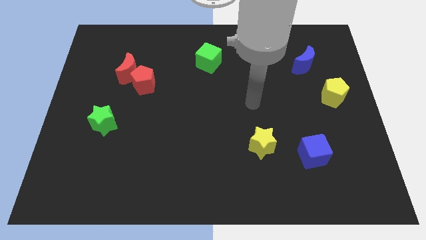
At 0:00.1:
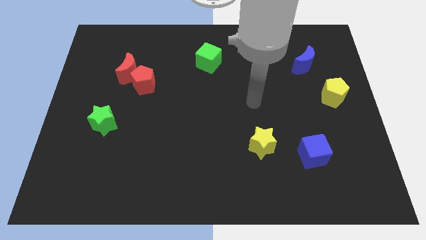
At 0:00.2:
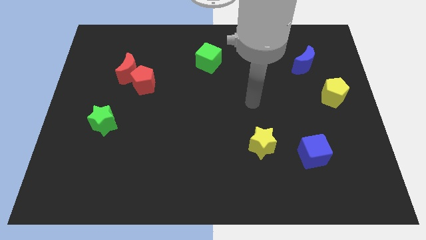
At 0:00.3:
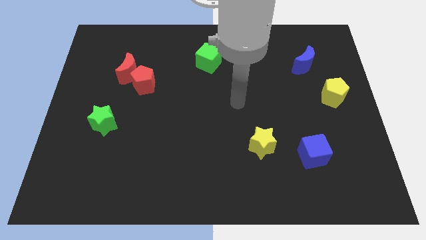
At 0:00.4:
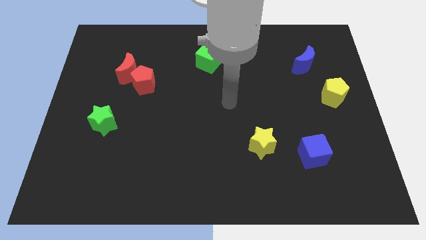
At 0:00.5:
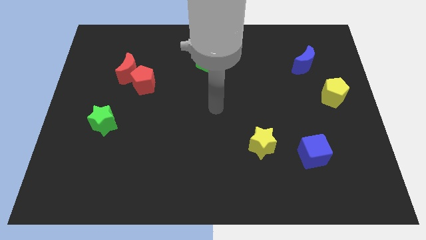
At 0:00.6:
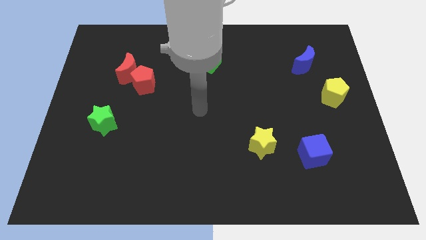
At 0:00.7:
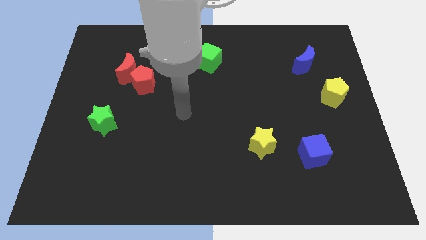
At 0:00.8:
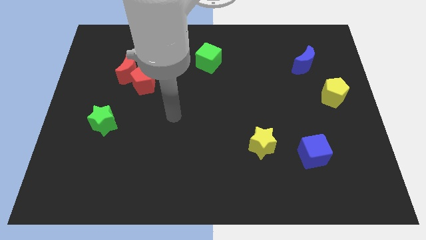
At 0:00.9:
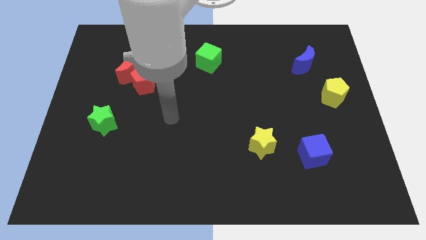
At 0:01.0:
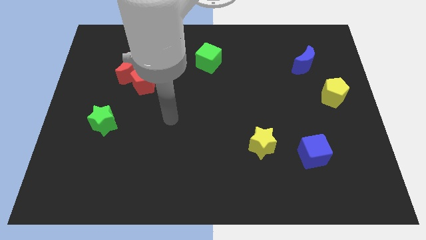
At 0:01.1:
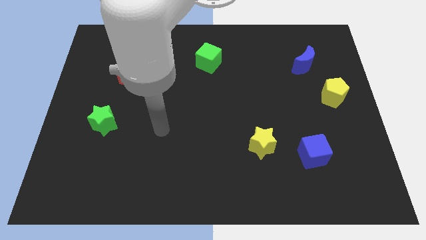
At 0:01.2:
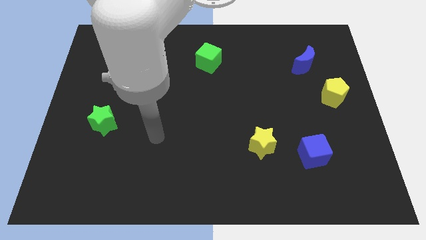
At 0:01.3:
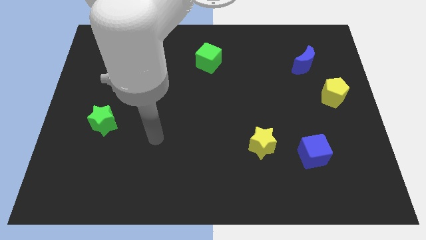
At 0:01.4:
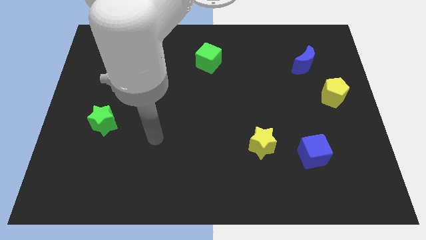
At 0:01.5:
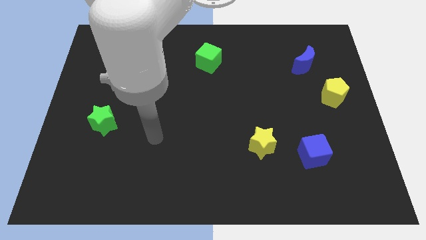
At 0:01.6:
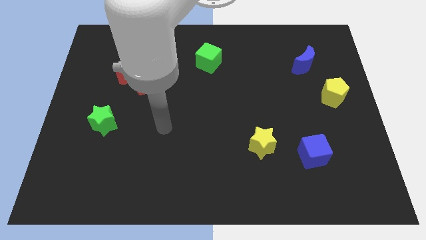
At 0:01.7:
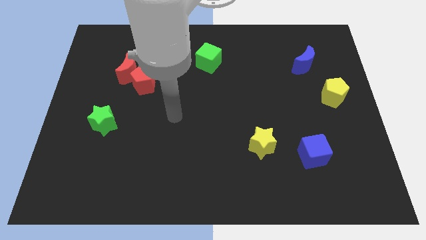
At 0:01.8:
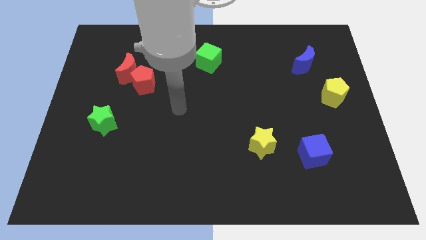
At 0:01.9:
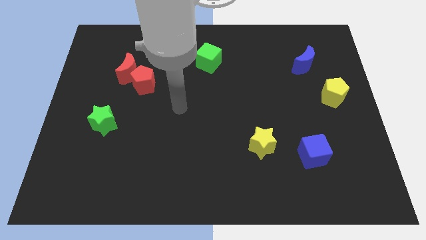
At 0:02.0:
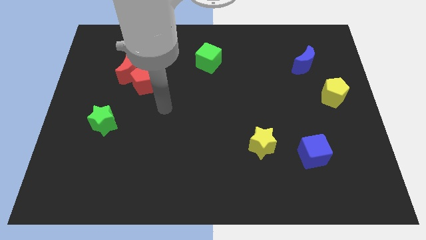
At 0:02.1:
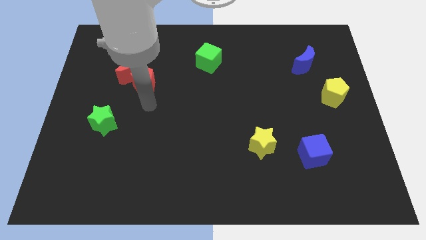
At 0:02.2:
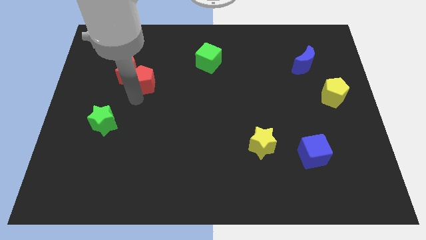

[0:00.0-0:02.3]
point your hand below the red pentagon

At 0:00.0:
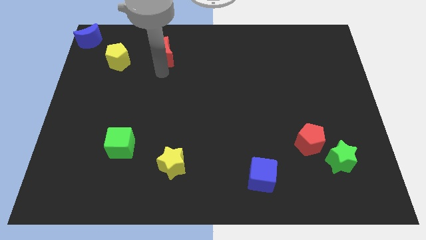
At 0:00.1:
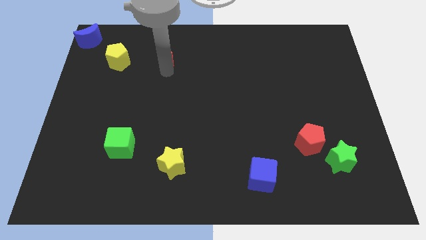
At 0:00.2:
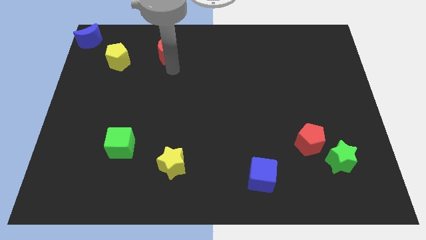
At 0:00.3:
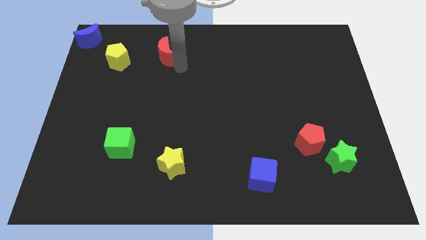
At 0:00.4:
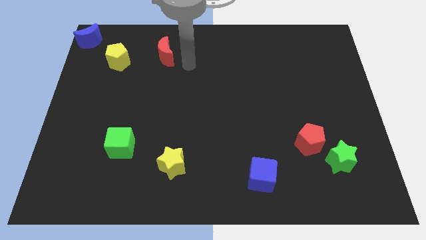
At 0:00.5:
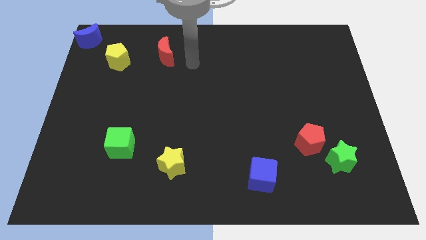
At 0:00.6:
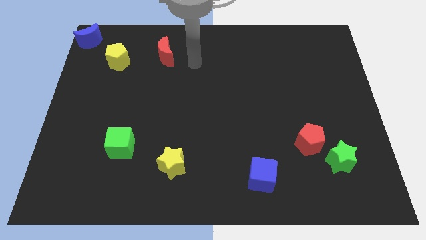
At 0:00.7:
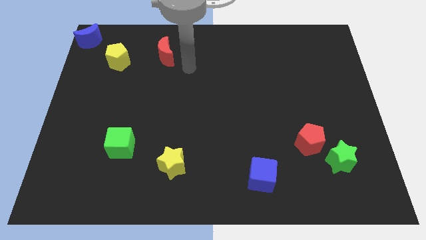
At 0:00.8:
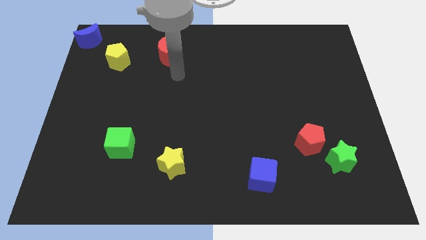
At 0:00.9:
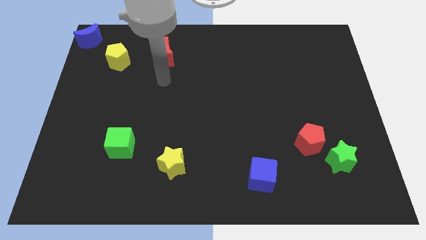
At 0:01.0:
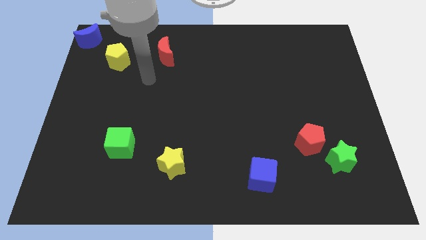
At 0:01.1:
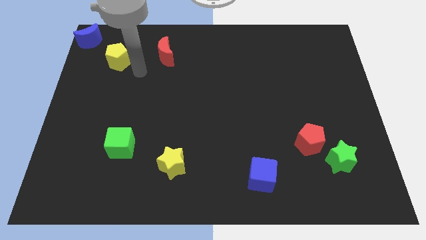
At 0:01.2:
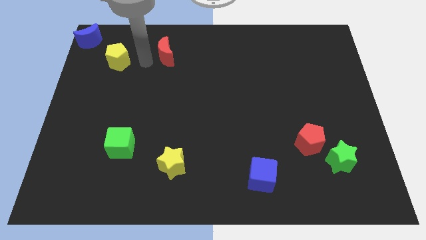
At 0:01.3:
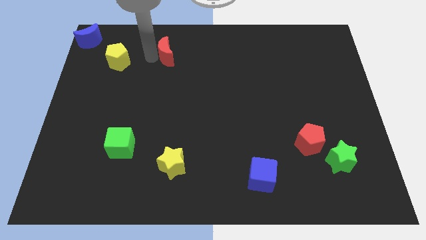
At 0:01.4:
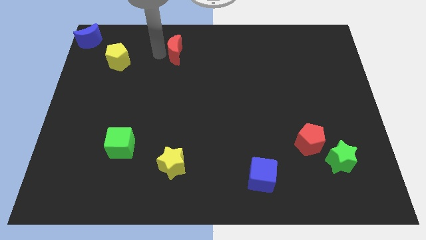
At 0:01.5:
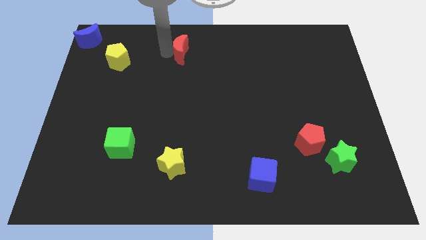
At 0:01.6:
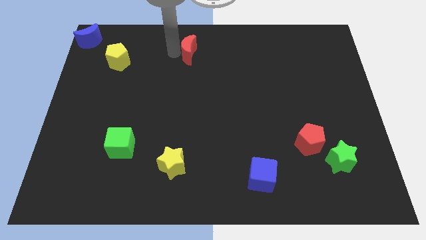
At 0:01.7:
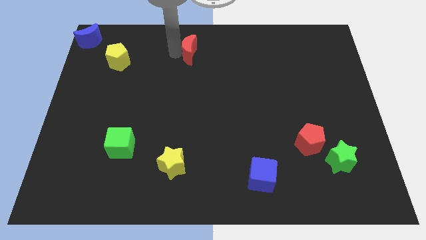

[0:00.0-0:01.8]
slightly move the red moon to the right

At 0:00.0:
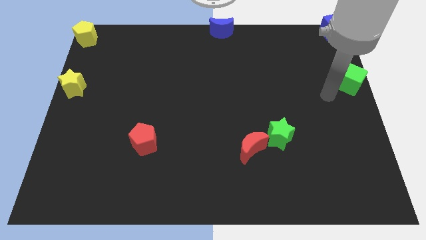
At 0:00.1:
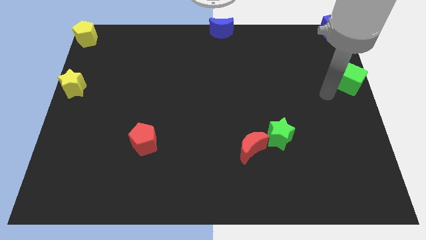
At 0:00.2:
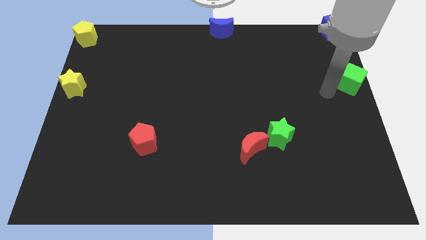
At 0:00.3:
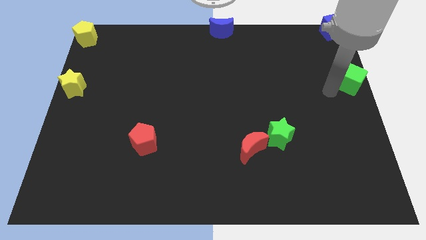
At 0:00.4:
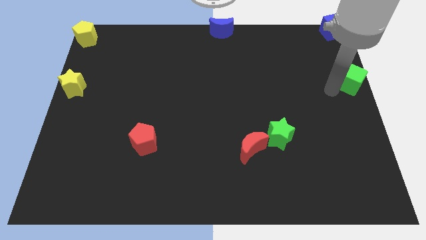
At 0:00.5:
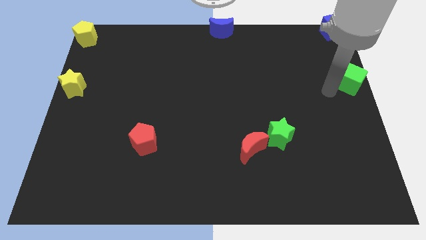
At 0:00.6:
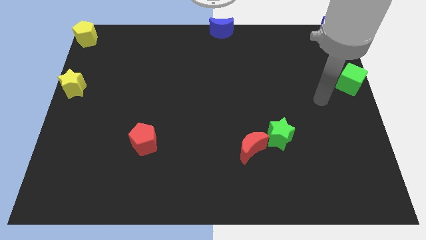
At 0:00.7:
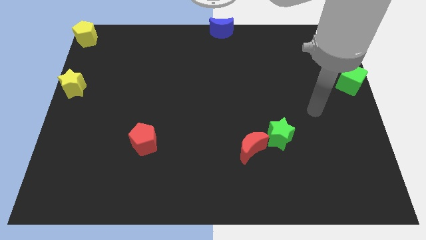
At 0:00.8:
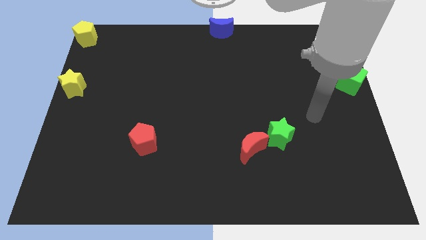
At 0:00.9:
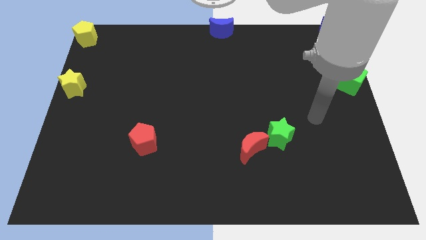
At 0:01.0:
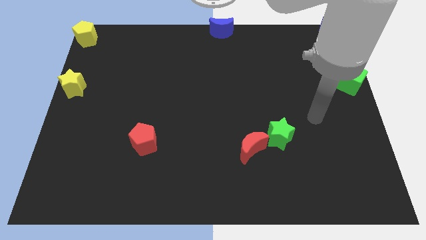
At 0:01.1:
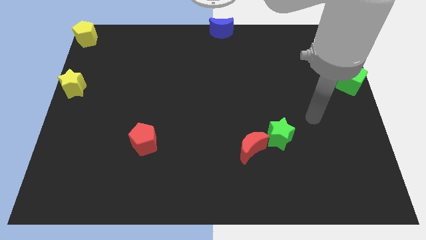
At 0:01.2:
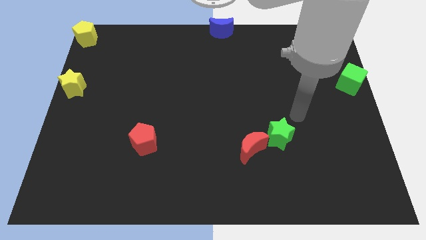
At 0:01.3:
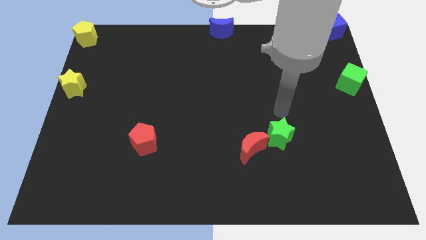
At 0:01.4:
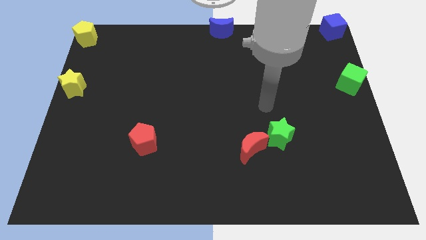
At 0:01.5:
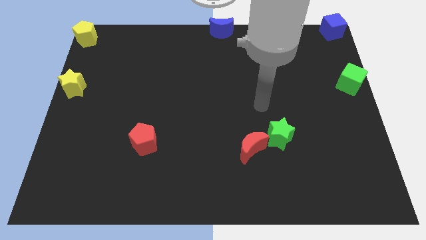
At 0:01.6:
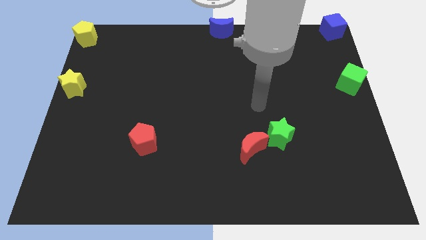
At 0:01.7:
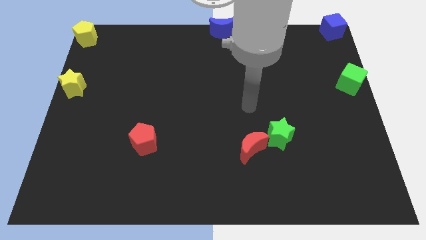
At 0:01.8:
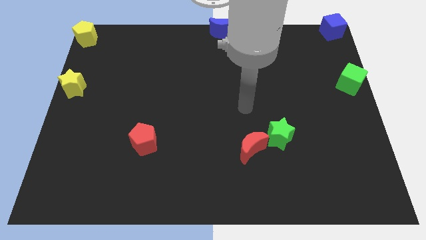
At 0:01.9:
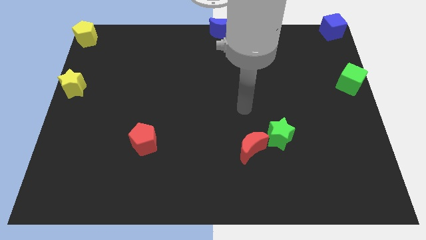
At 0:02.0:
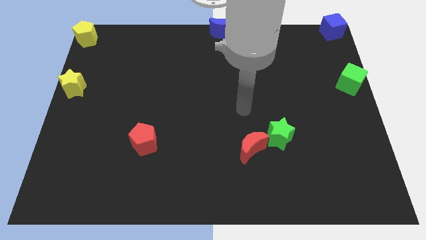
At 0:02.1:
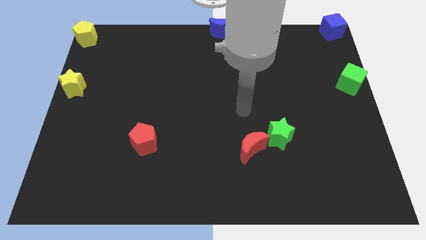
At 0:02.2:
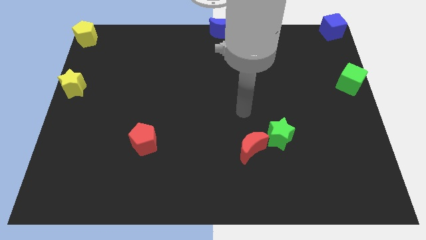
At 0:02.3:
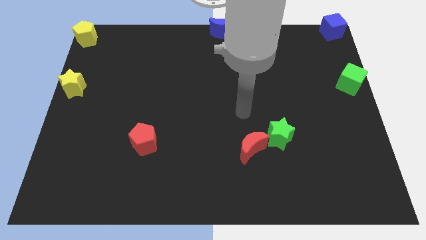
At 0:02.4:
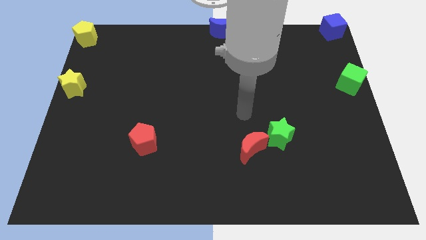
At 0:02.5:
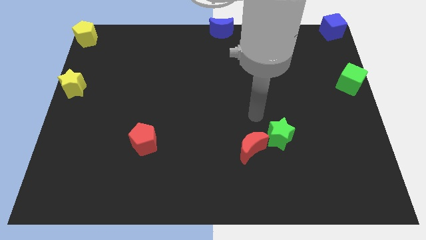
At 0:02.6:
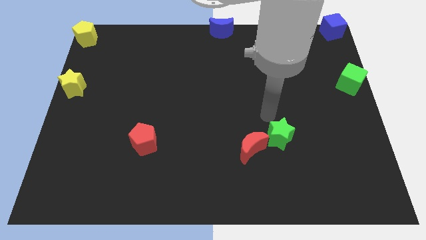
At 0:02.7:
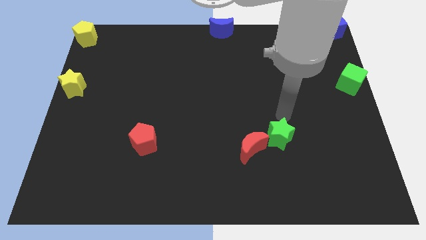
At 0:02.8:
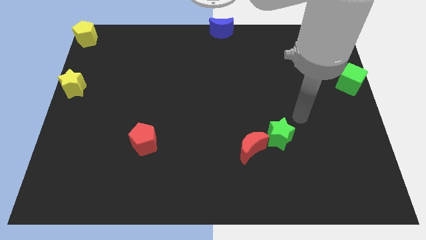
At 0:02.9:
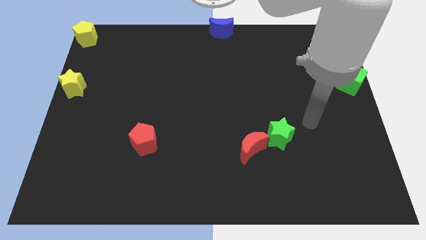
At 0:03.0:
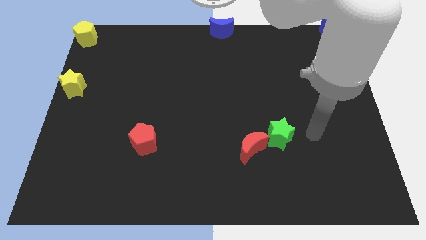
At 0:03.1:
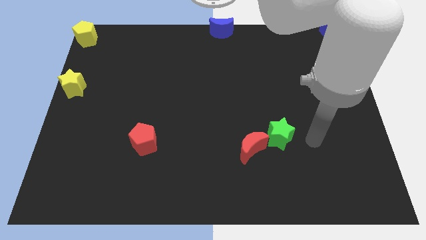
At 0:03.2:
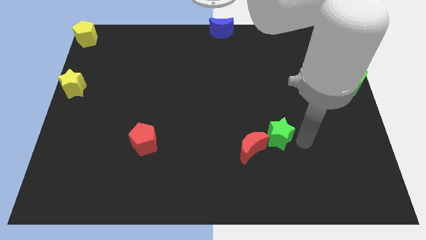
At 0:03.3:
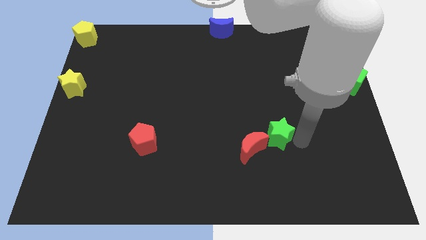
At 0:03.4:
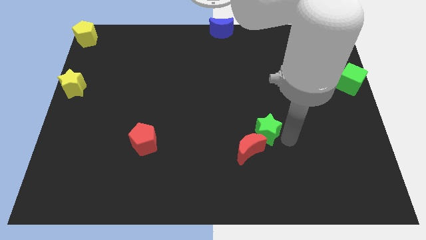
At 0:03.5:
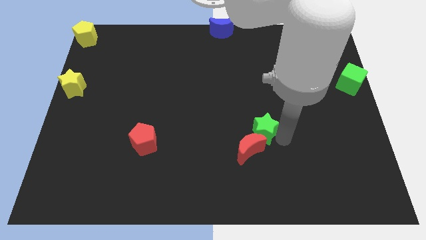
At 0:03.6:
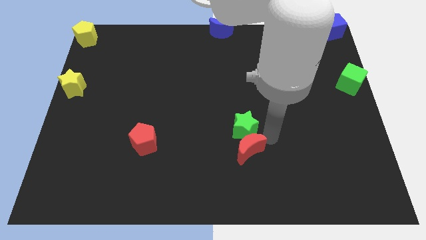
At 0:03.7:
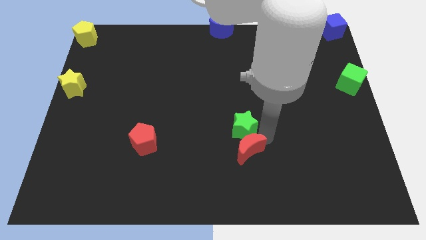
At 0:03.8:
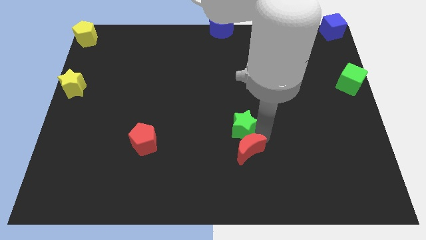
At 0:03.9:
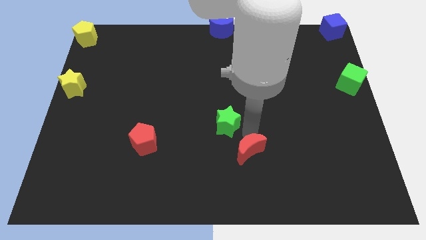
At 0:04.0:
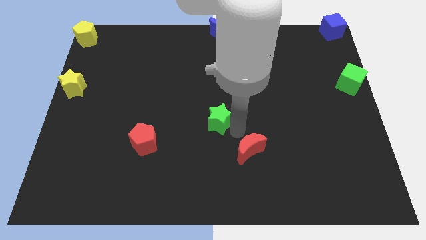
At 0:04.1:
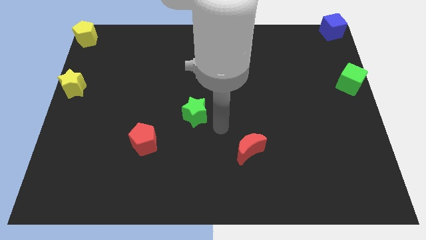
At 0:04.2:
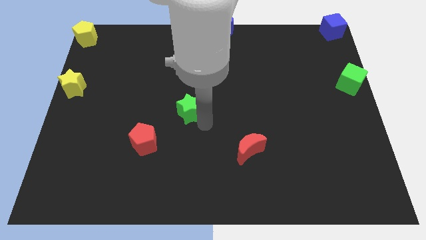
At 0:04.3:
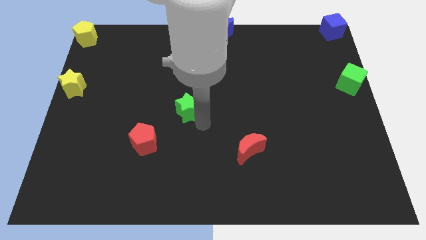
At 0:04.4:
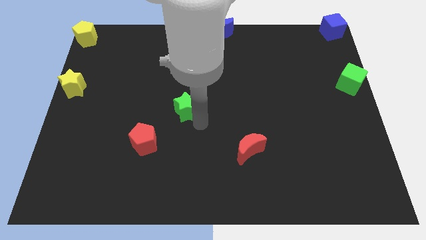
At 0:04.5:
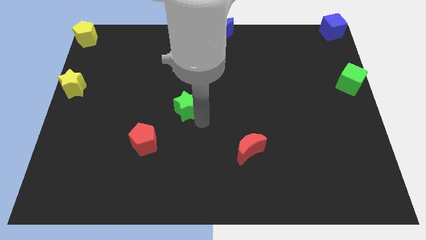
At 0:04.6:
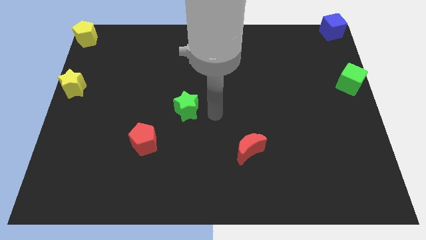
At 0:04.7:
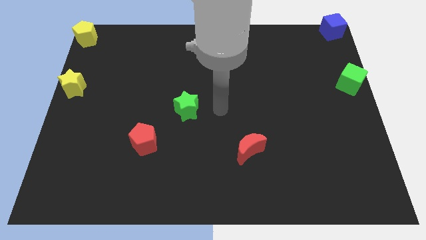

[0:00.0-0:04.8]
place the green star diagonal to the red pentagon
